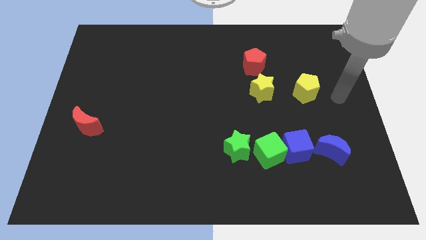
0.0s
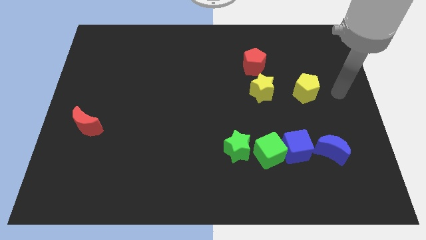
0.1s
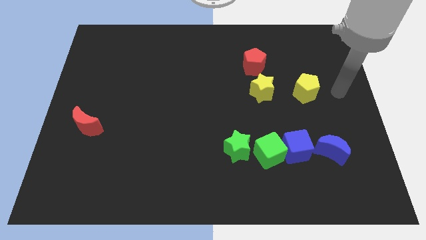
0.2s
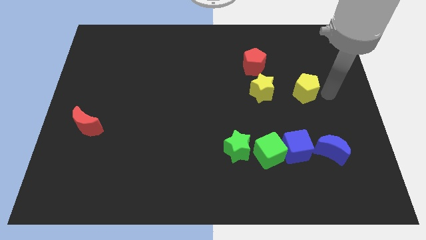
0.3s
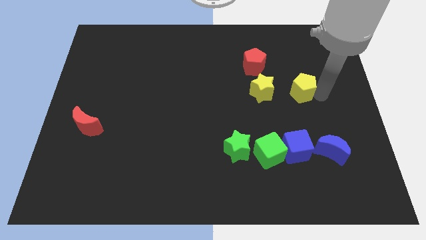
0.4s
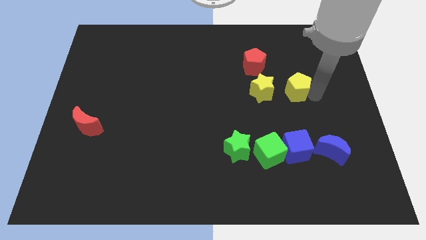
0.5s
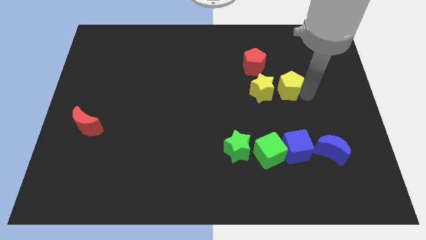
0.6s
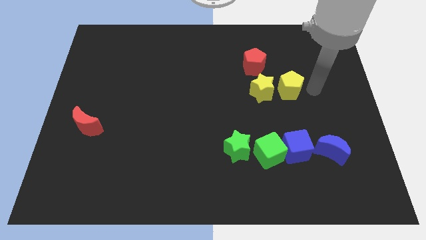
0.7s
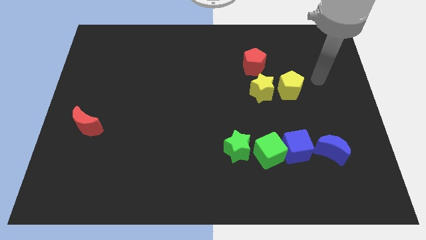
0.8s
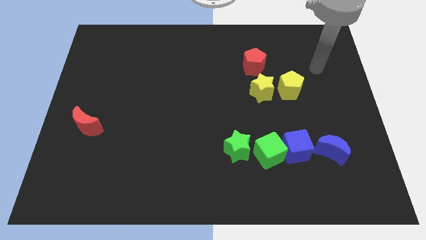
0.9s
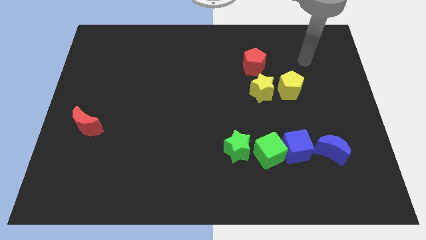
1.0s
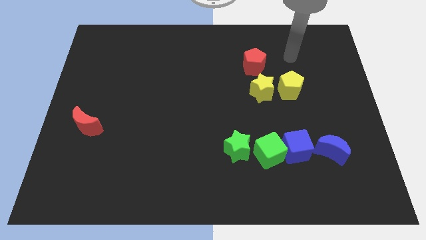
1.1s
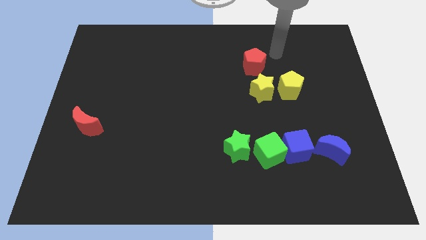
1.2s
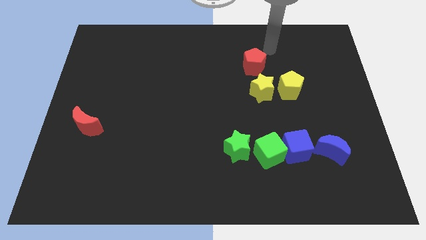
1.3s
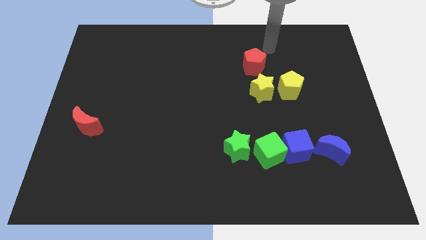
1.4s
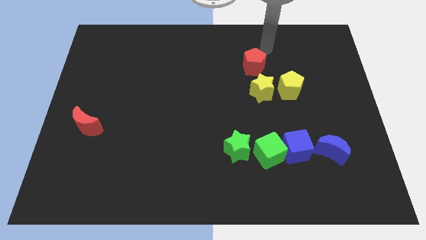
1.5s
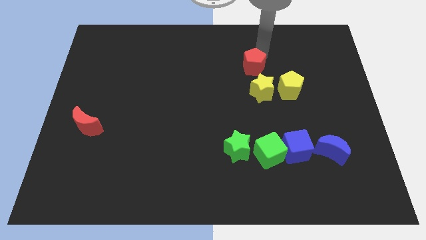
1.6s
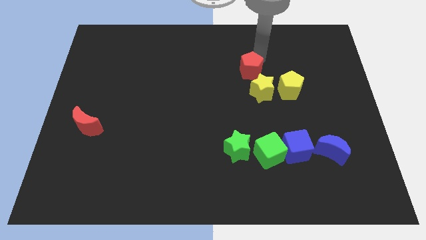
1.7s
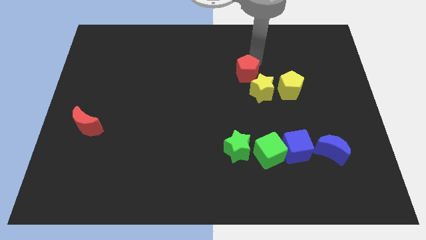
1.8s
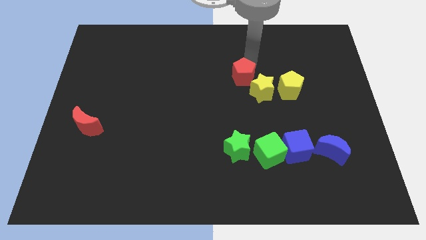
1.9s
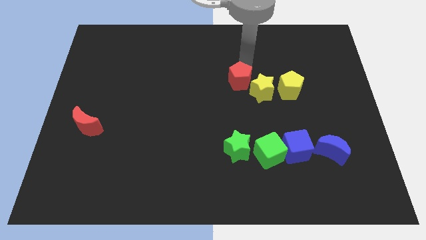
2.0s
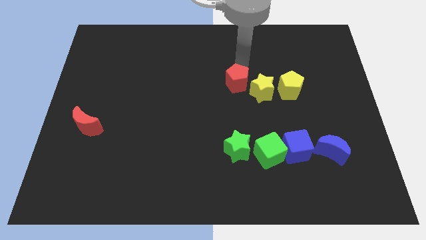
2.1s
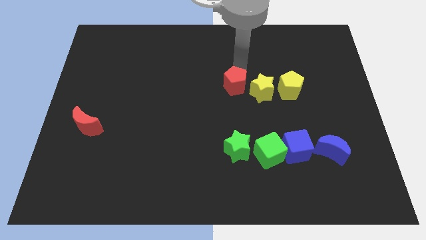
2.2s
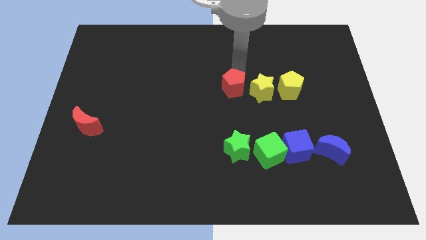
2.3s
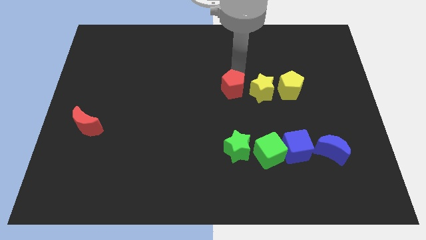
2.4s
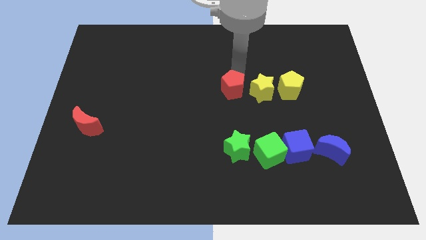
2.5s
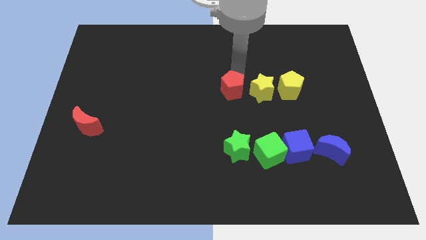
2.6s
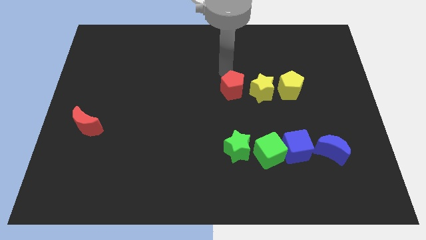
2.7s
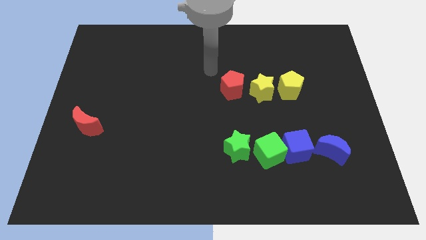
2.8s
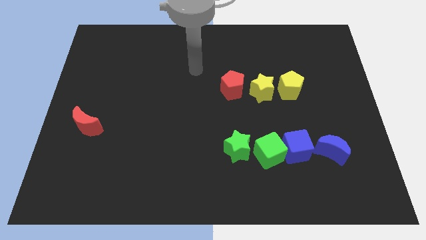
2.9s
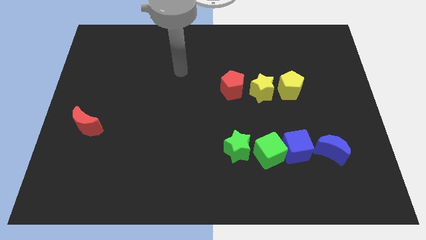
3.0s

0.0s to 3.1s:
make a horizontal line with yellow blocks and the red pentagon

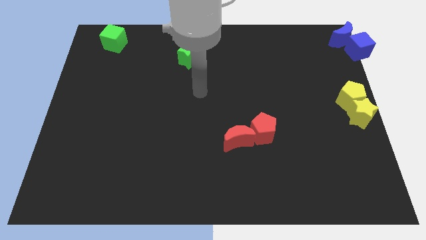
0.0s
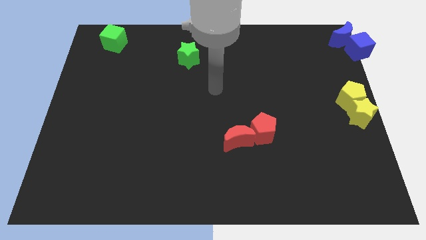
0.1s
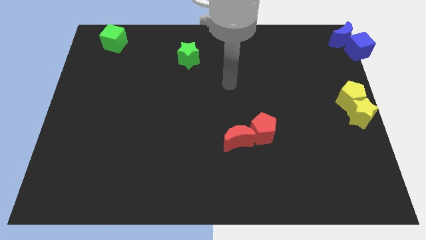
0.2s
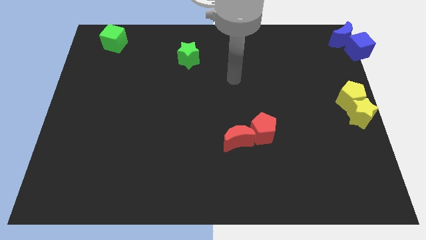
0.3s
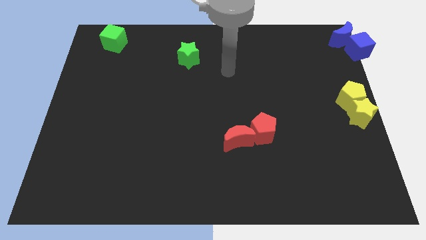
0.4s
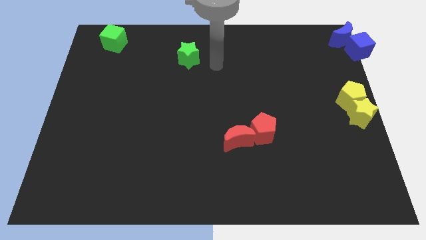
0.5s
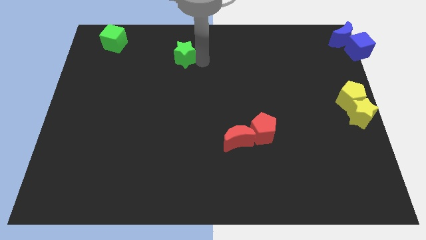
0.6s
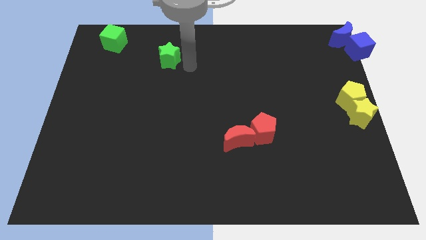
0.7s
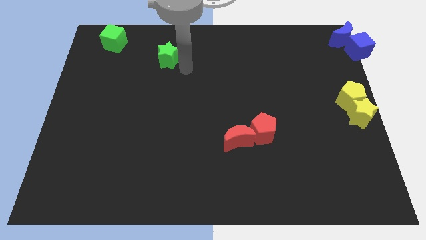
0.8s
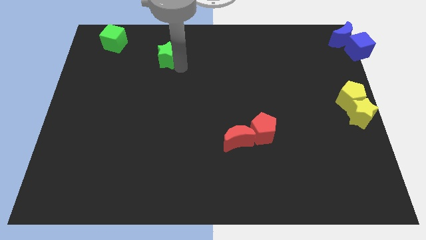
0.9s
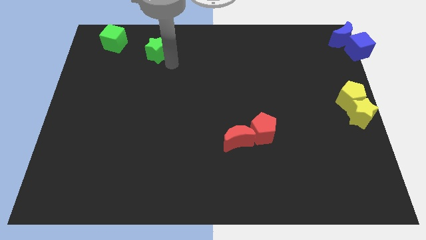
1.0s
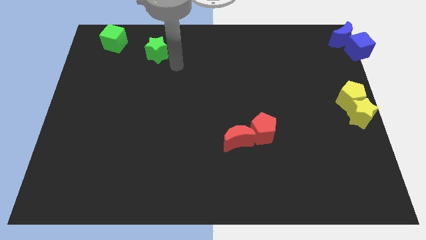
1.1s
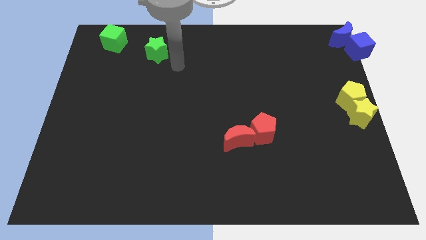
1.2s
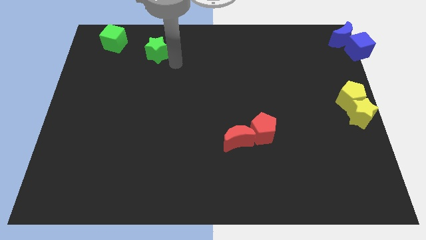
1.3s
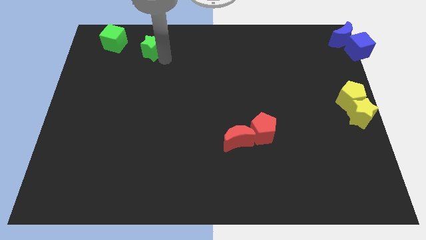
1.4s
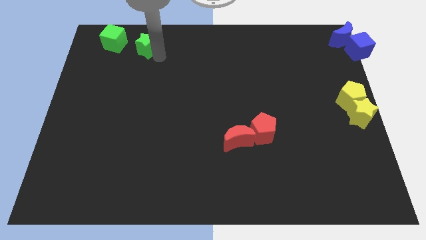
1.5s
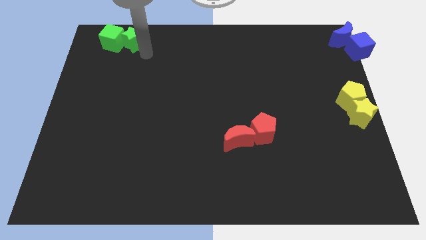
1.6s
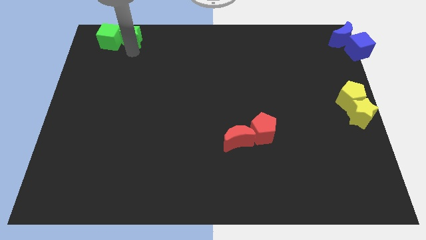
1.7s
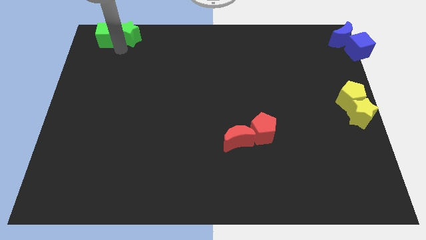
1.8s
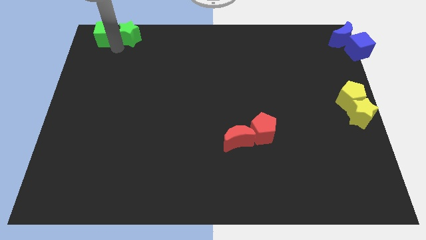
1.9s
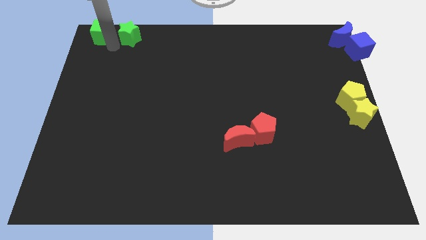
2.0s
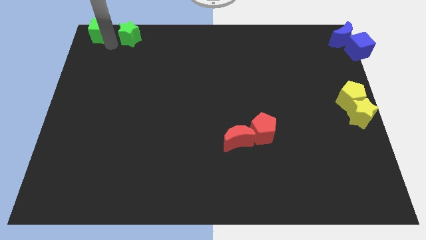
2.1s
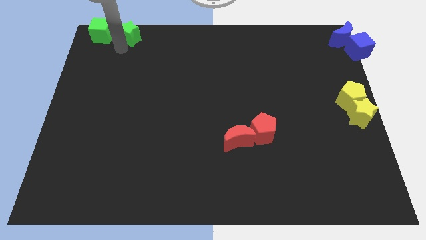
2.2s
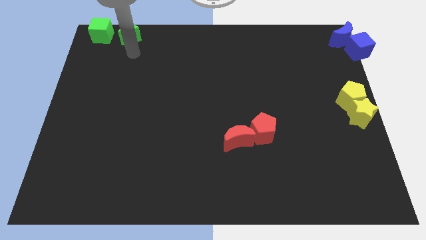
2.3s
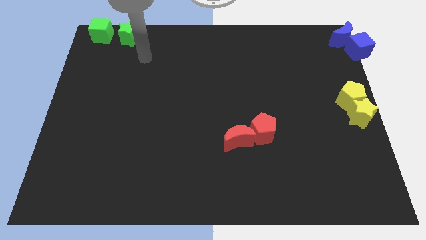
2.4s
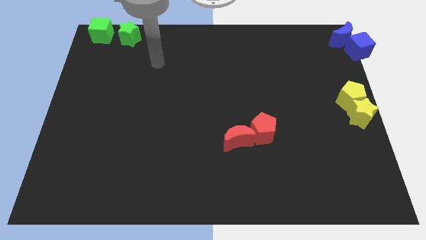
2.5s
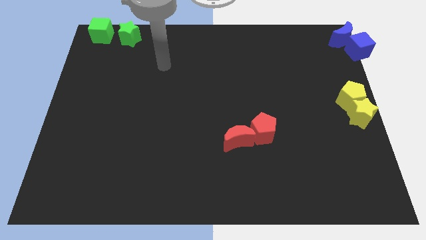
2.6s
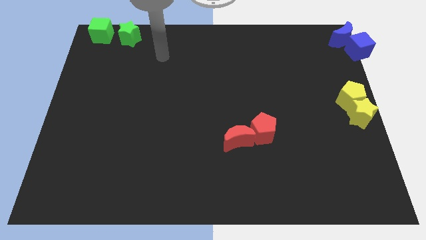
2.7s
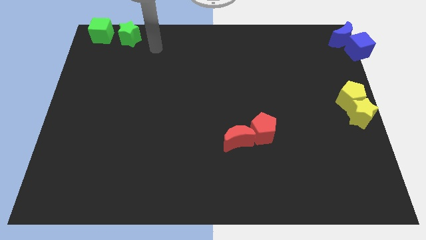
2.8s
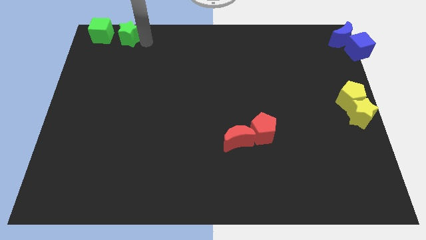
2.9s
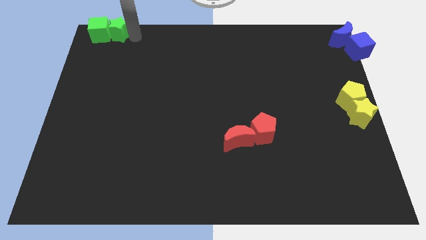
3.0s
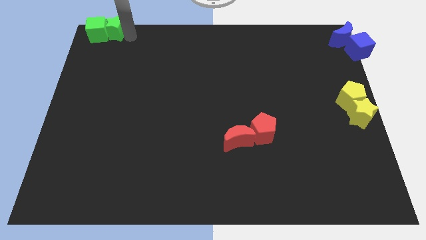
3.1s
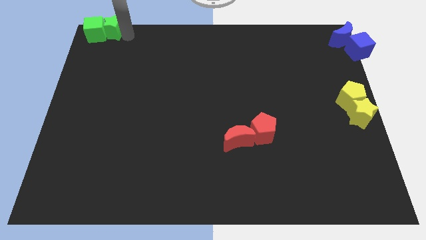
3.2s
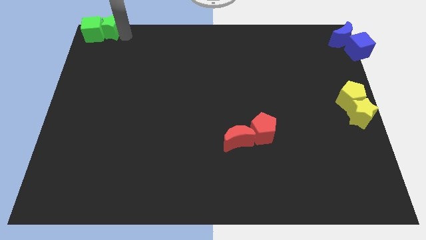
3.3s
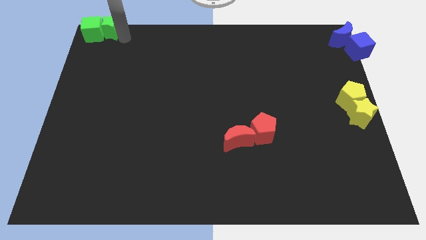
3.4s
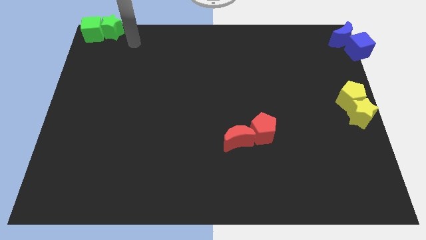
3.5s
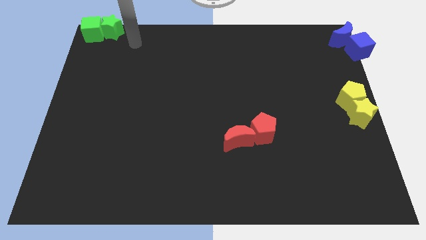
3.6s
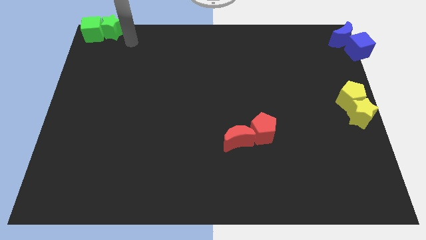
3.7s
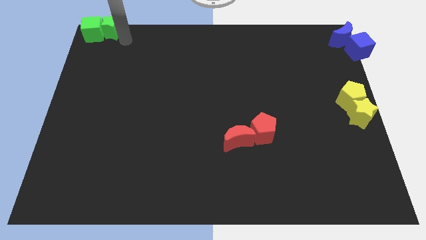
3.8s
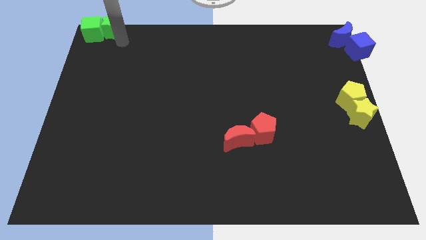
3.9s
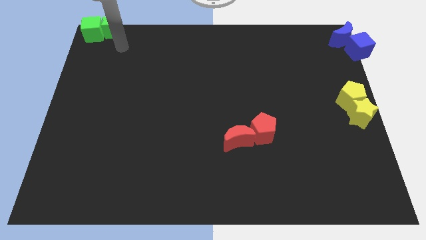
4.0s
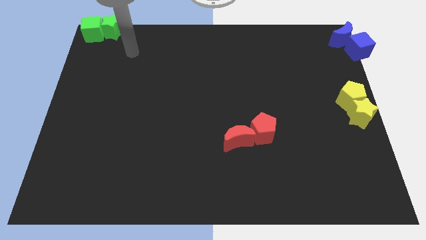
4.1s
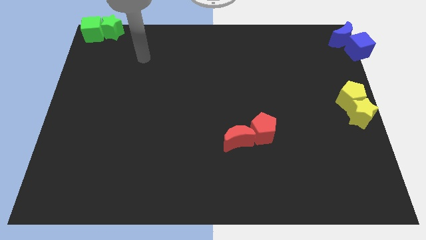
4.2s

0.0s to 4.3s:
push the green star close to the green cube

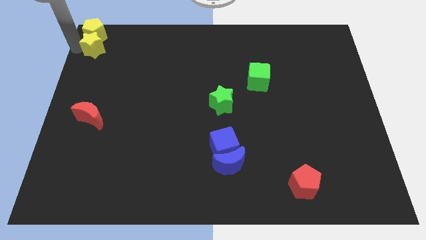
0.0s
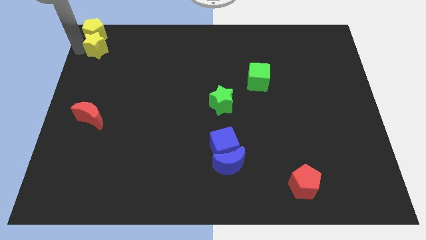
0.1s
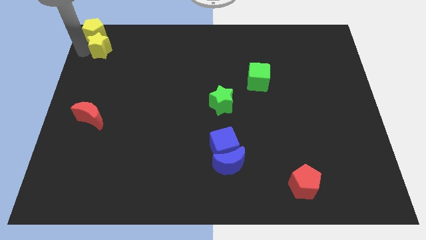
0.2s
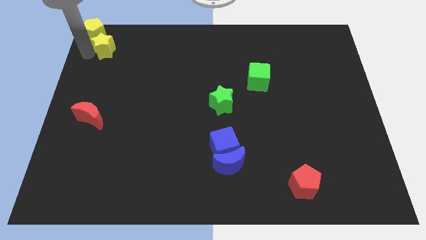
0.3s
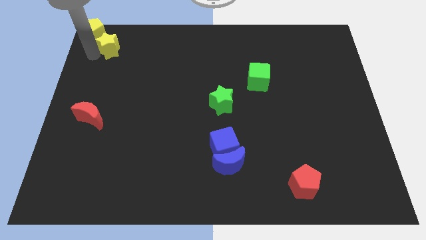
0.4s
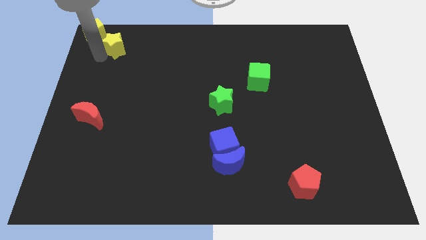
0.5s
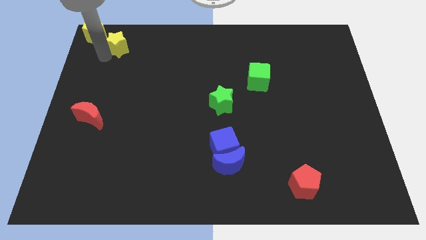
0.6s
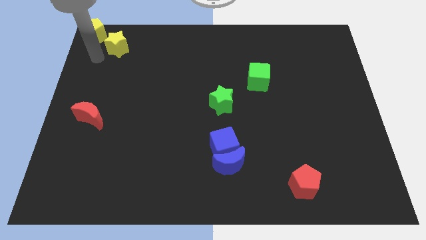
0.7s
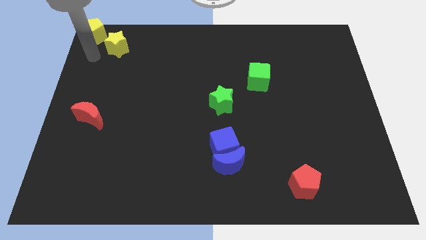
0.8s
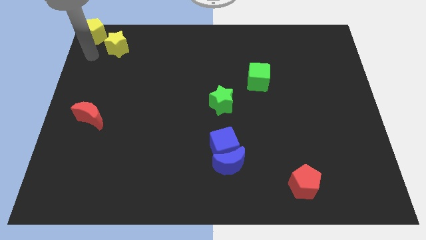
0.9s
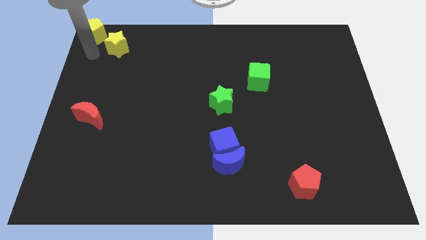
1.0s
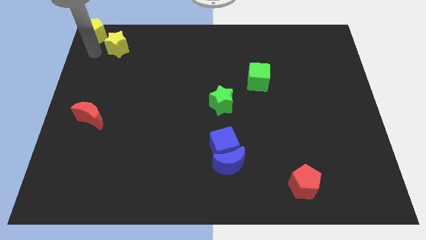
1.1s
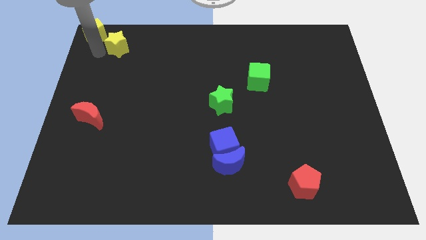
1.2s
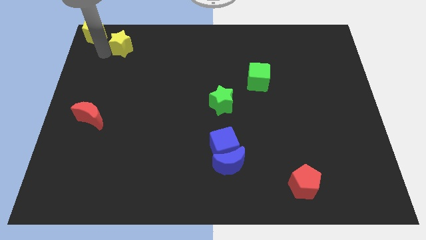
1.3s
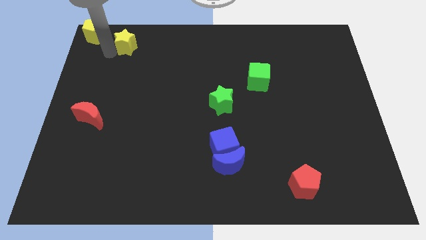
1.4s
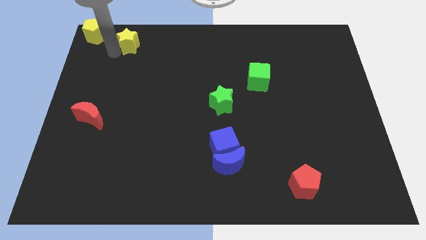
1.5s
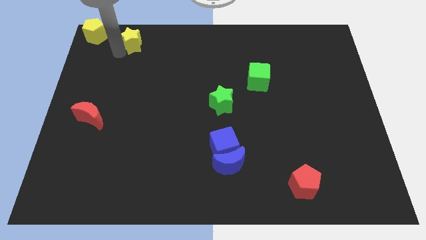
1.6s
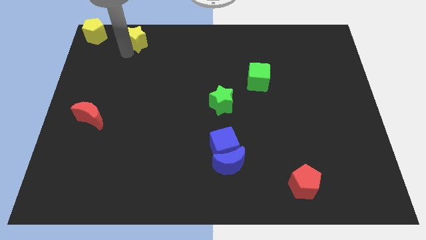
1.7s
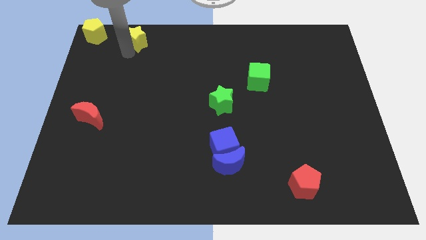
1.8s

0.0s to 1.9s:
slide the yellow star to the right
